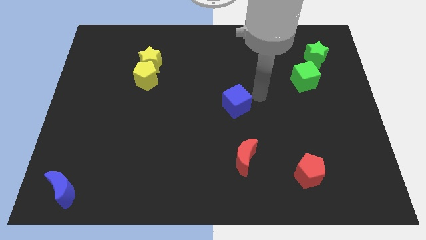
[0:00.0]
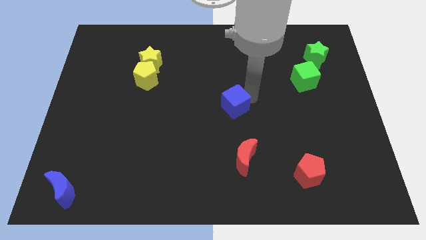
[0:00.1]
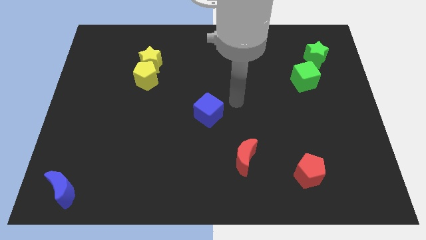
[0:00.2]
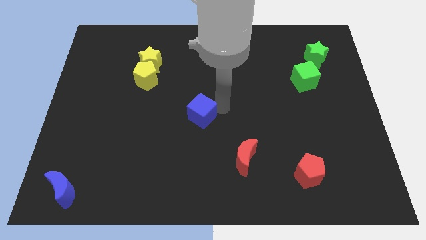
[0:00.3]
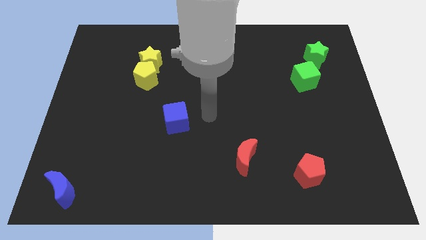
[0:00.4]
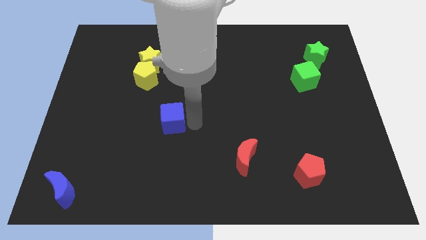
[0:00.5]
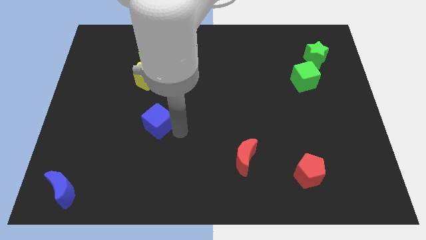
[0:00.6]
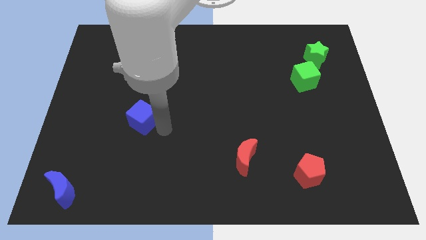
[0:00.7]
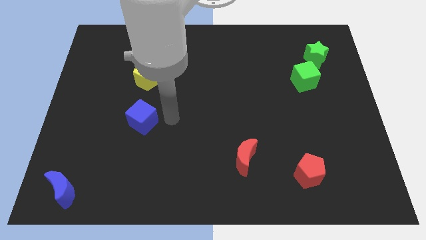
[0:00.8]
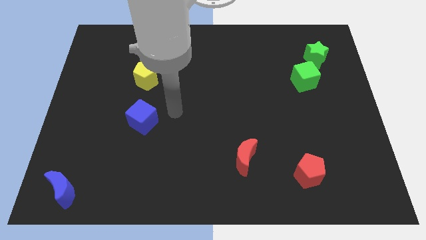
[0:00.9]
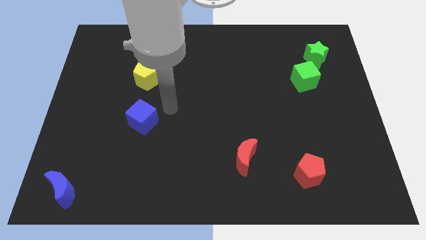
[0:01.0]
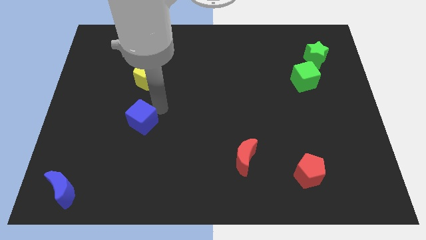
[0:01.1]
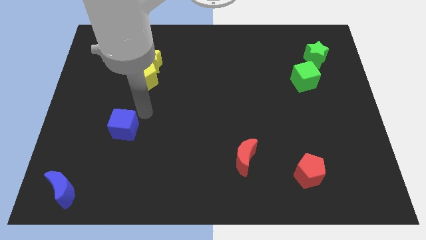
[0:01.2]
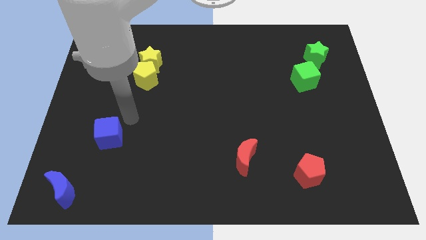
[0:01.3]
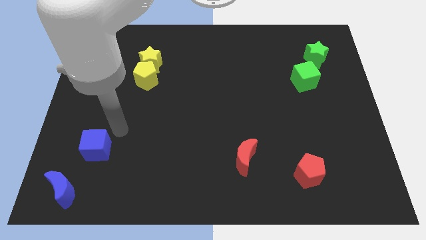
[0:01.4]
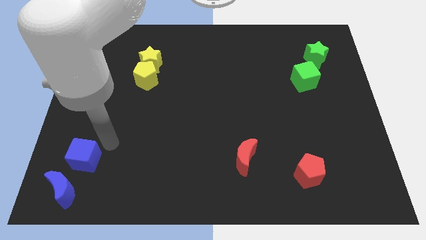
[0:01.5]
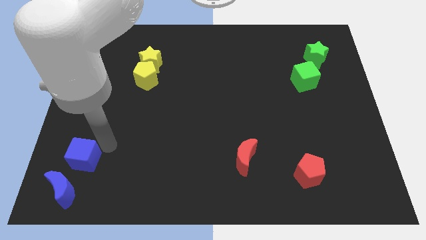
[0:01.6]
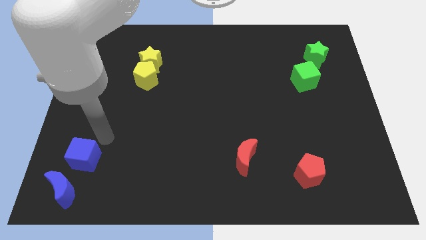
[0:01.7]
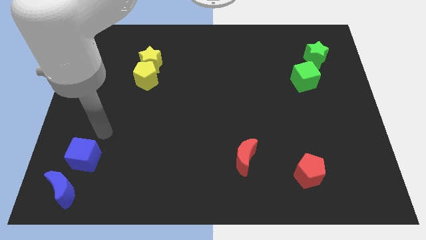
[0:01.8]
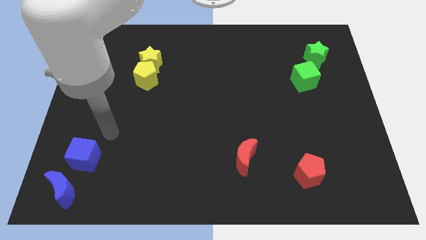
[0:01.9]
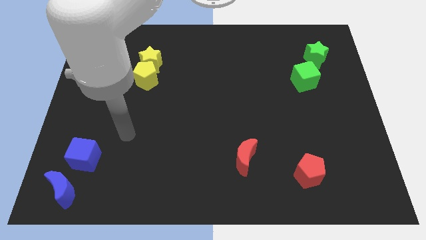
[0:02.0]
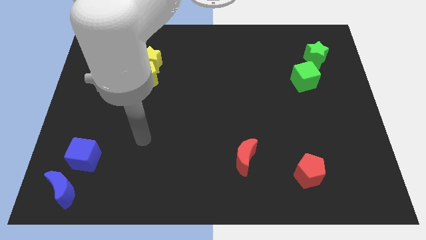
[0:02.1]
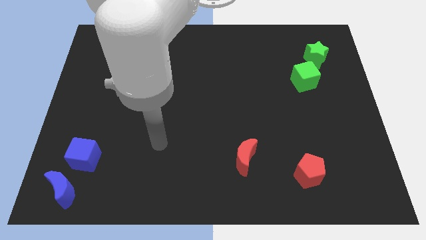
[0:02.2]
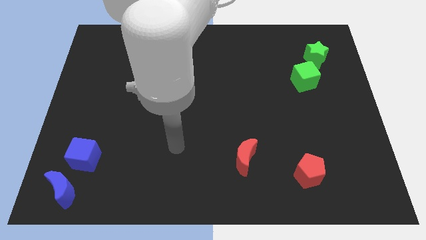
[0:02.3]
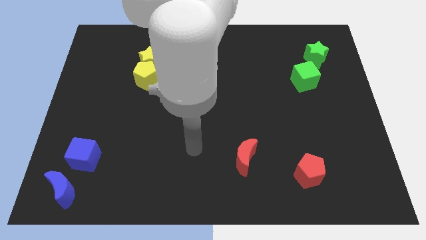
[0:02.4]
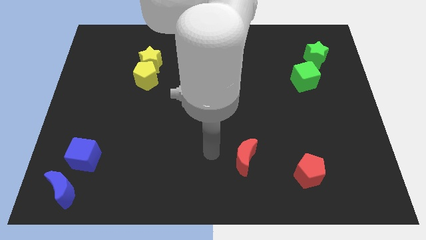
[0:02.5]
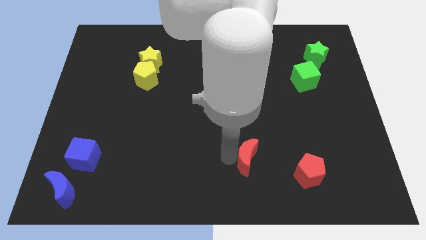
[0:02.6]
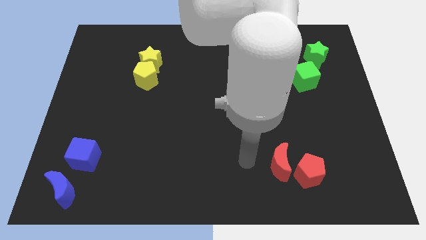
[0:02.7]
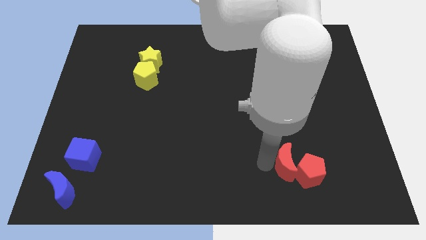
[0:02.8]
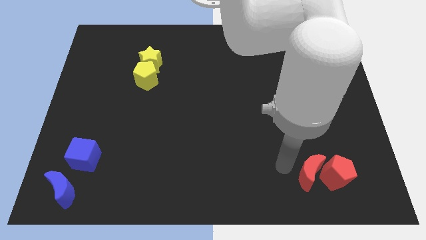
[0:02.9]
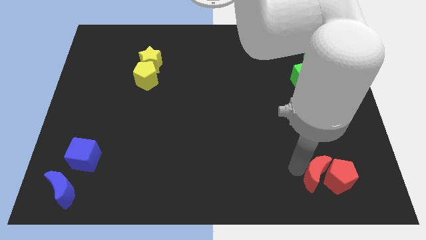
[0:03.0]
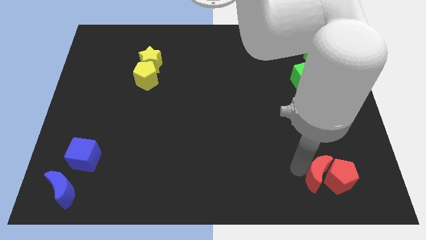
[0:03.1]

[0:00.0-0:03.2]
push the blue cube near to the blue crescent

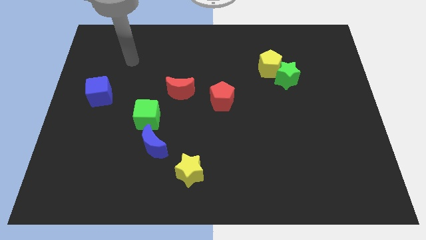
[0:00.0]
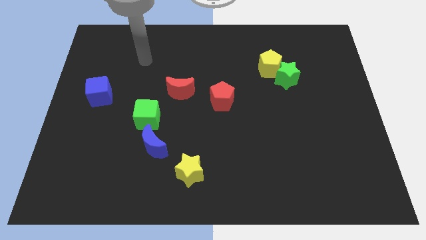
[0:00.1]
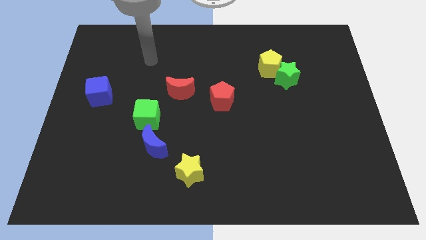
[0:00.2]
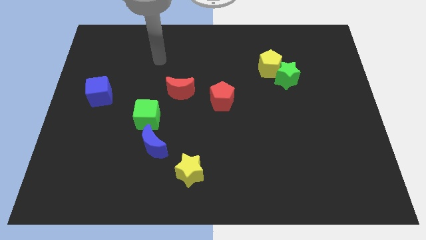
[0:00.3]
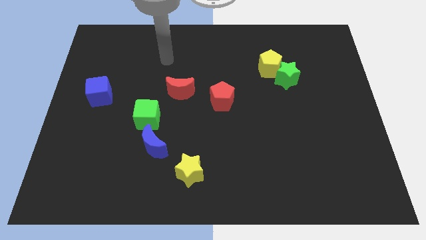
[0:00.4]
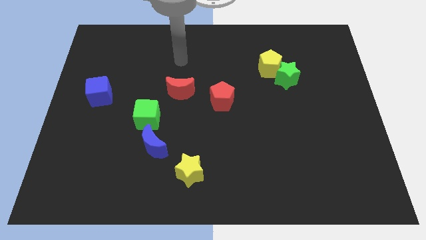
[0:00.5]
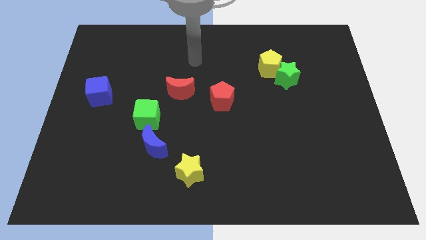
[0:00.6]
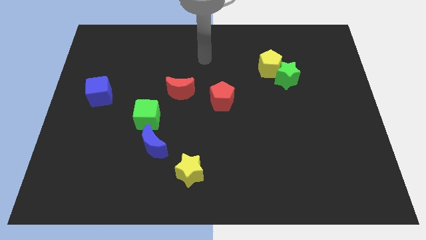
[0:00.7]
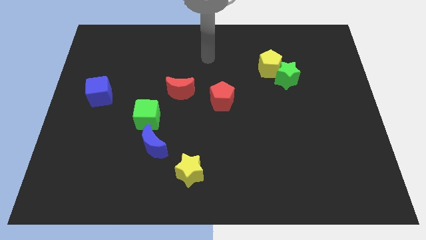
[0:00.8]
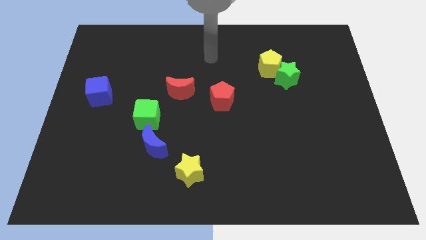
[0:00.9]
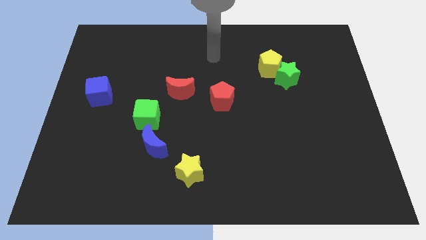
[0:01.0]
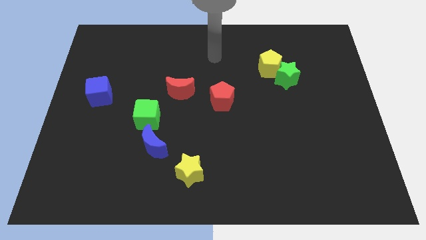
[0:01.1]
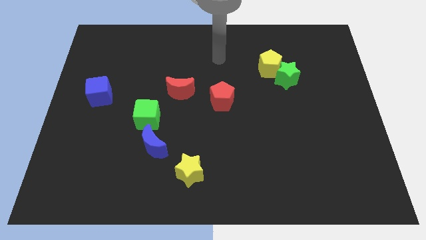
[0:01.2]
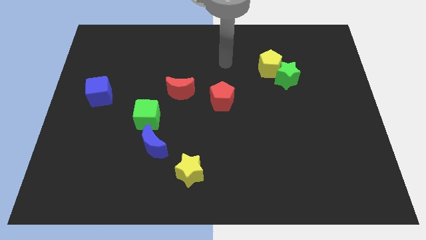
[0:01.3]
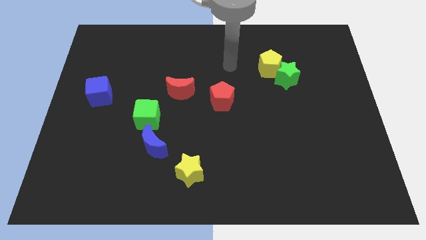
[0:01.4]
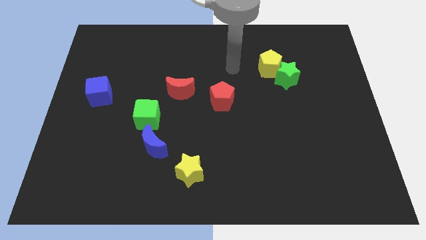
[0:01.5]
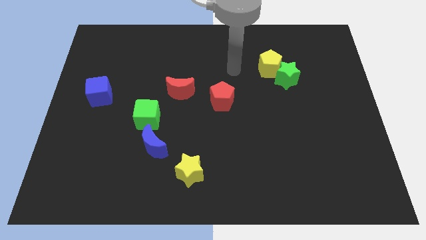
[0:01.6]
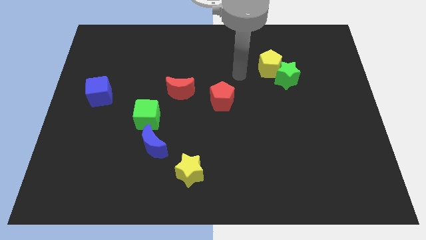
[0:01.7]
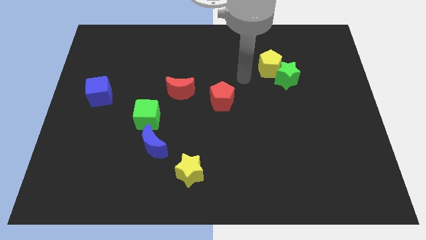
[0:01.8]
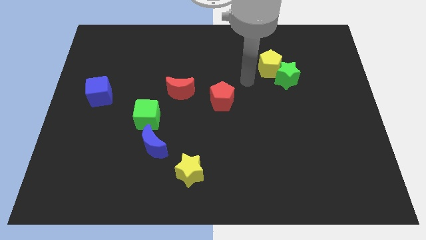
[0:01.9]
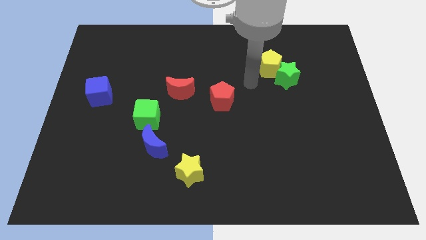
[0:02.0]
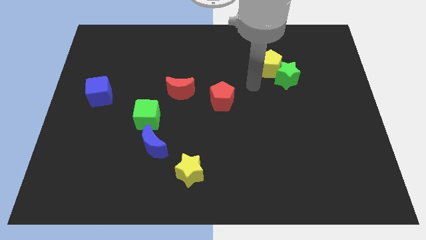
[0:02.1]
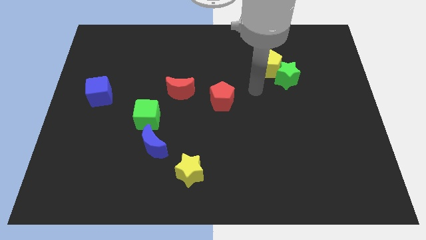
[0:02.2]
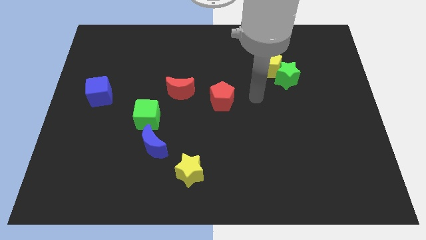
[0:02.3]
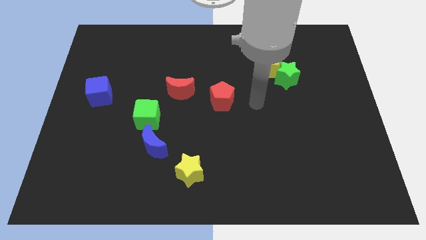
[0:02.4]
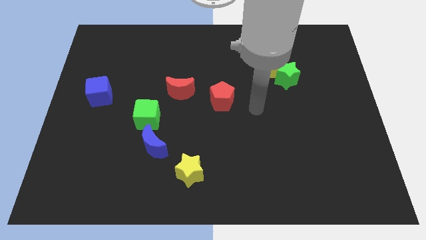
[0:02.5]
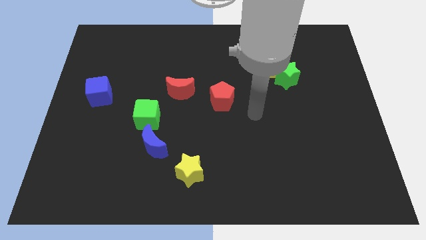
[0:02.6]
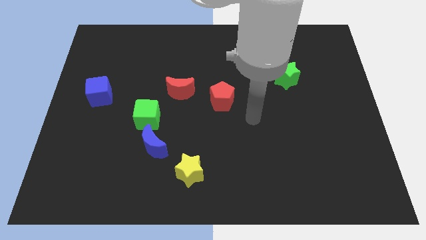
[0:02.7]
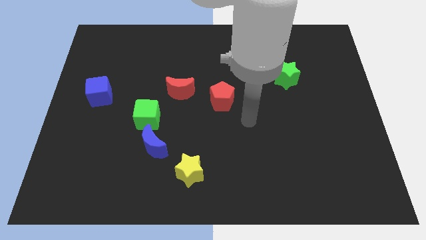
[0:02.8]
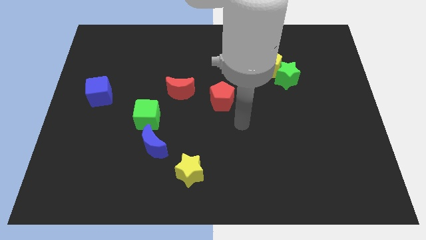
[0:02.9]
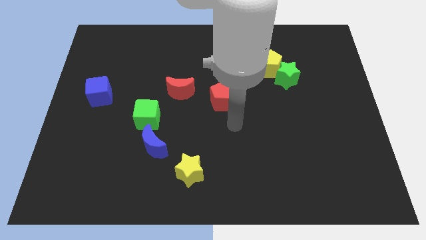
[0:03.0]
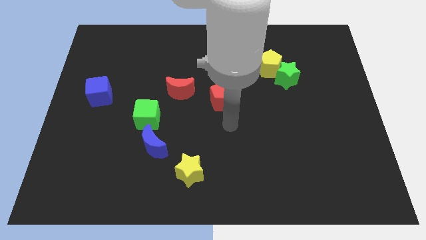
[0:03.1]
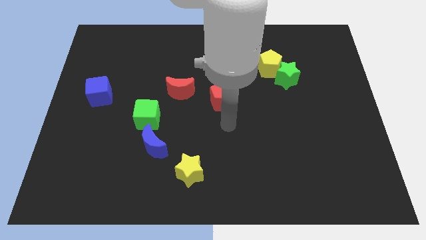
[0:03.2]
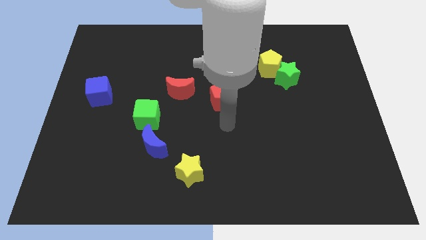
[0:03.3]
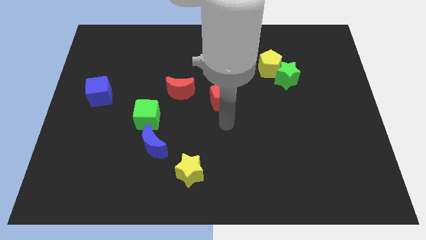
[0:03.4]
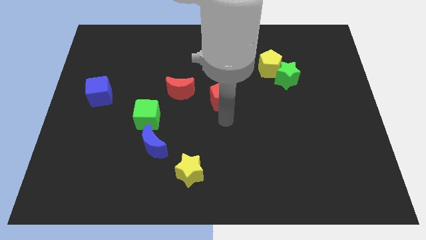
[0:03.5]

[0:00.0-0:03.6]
point your arm at the bottom of the red pentagon

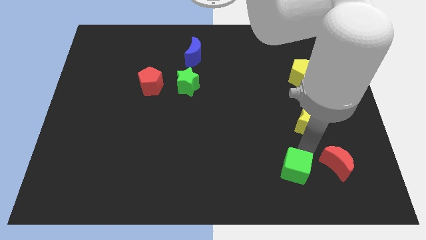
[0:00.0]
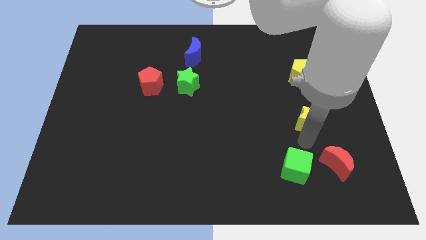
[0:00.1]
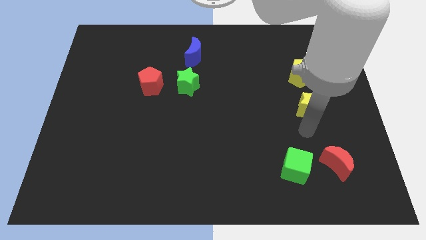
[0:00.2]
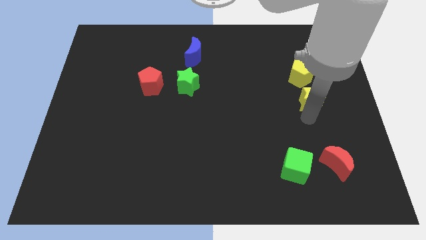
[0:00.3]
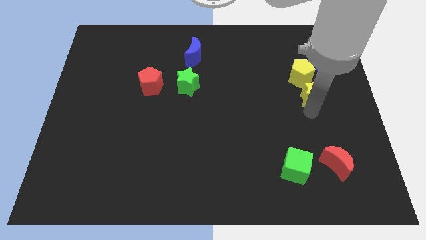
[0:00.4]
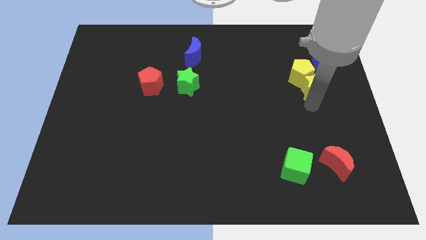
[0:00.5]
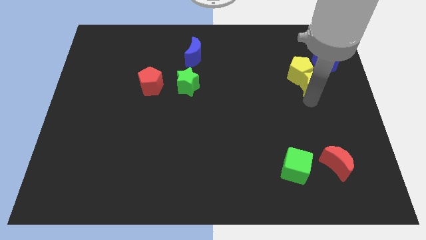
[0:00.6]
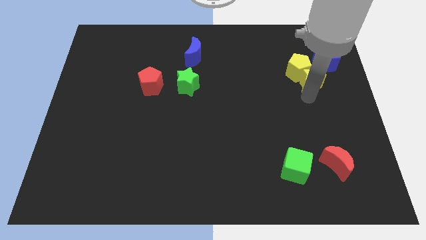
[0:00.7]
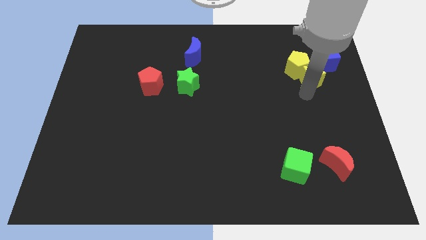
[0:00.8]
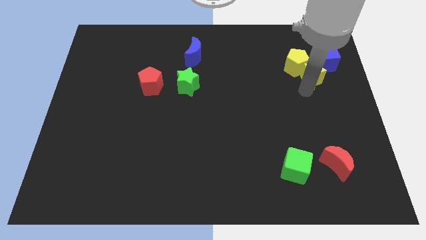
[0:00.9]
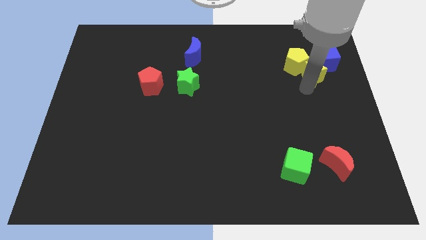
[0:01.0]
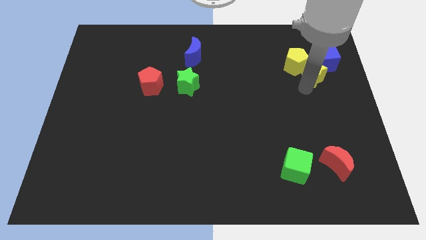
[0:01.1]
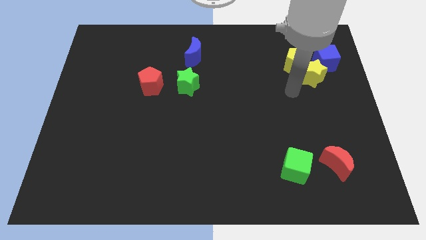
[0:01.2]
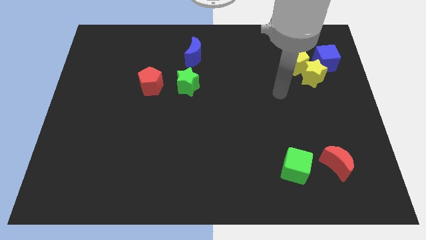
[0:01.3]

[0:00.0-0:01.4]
push the yellow star into the yellow pentagon

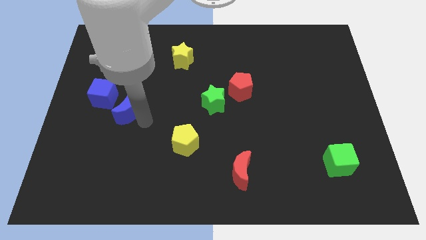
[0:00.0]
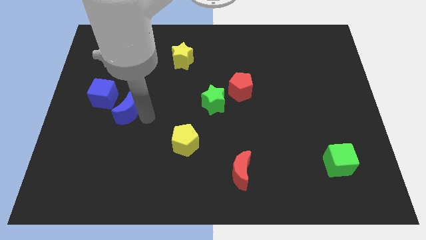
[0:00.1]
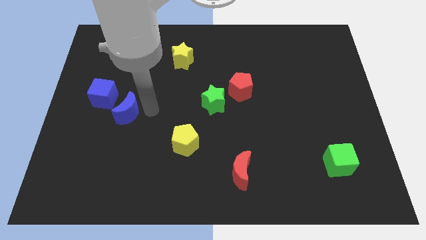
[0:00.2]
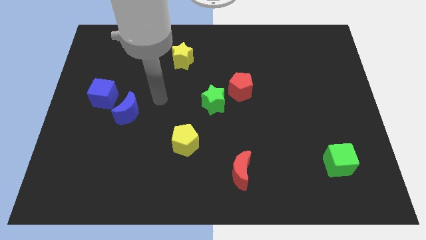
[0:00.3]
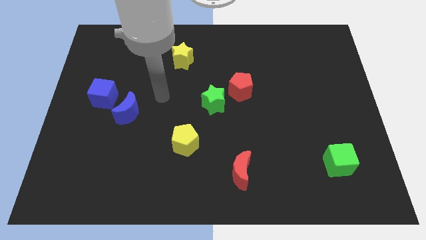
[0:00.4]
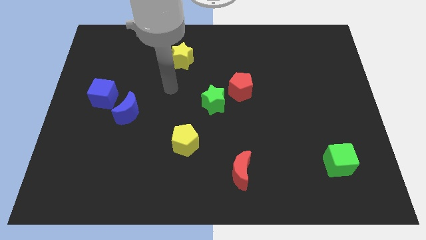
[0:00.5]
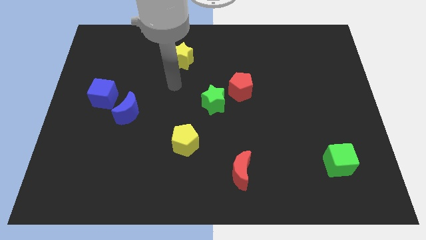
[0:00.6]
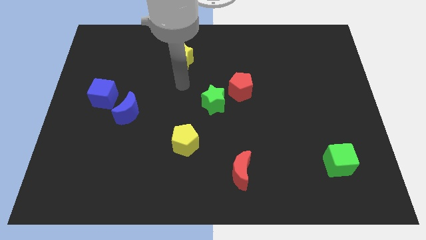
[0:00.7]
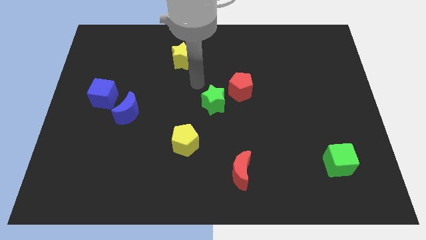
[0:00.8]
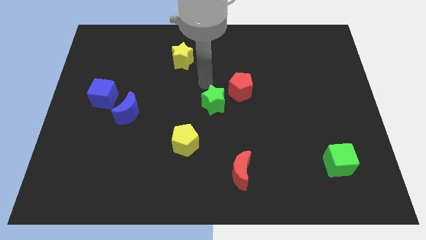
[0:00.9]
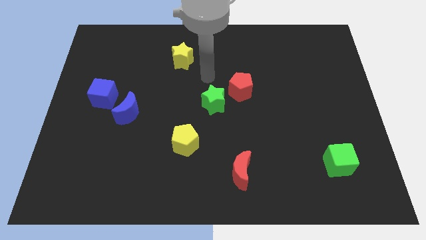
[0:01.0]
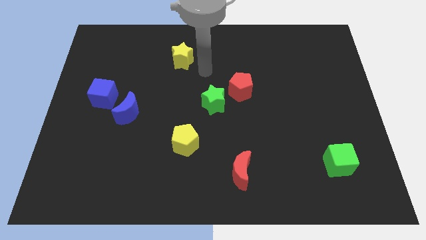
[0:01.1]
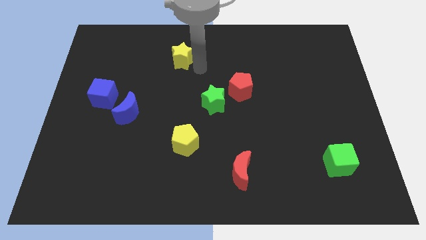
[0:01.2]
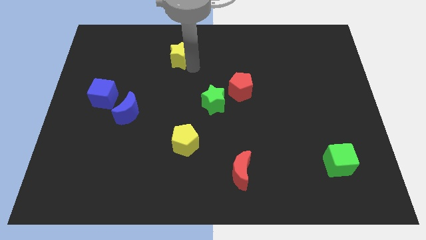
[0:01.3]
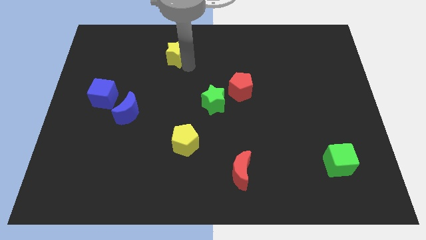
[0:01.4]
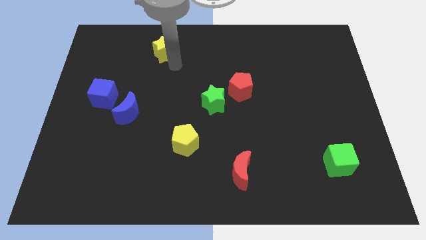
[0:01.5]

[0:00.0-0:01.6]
push the yellow star slightly to the top left
